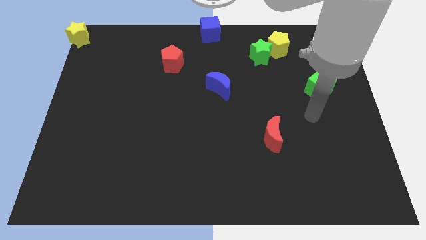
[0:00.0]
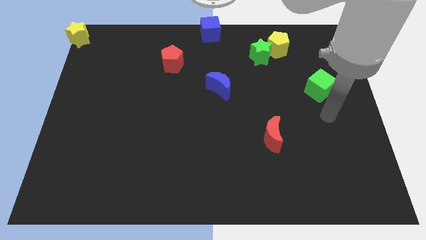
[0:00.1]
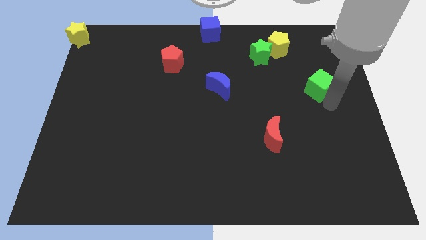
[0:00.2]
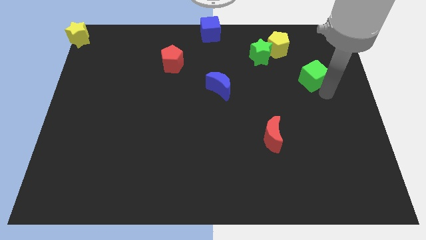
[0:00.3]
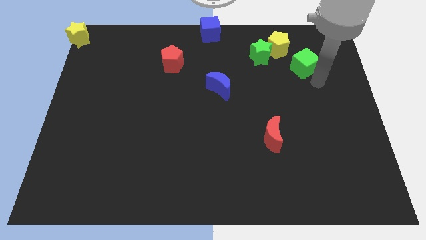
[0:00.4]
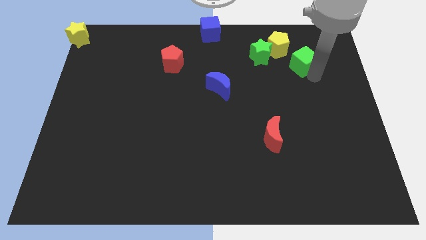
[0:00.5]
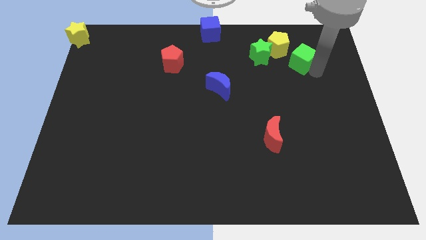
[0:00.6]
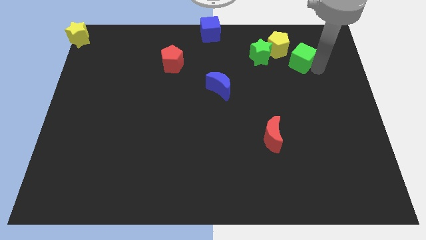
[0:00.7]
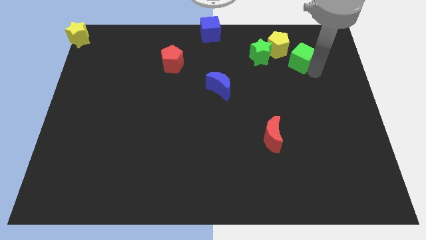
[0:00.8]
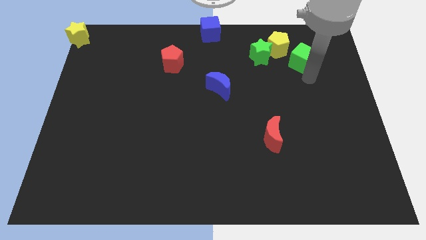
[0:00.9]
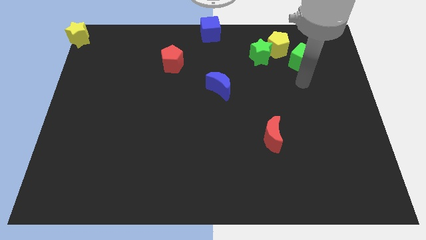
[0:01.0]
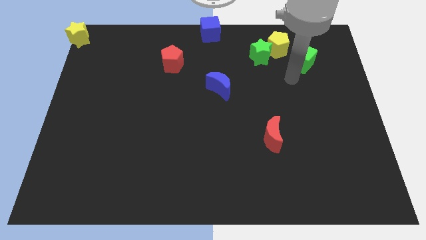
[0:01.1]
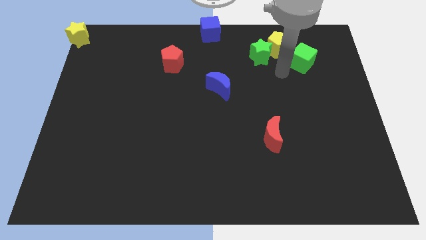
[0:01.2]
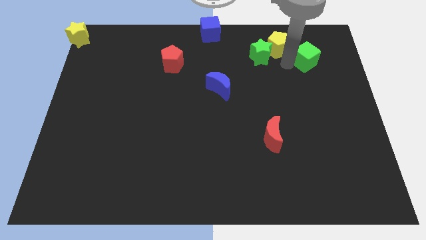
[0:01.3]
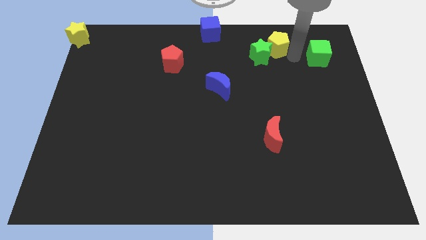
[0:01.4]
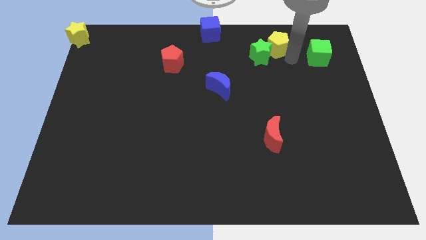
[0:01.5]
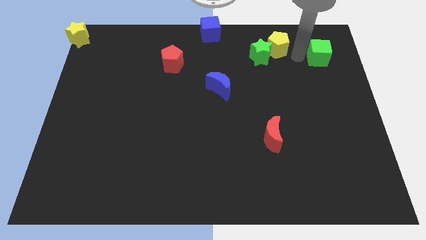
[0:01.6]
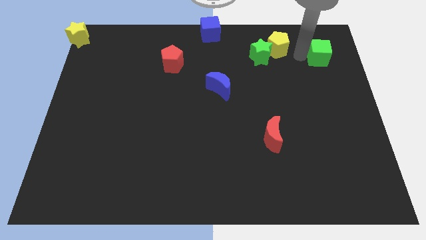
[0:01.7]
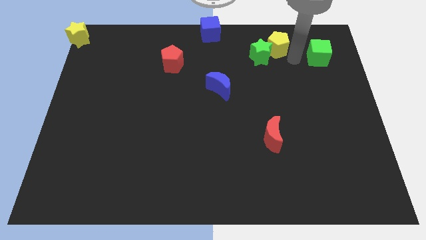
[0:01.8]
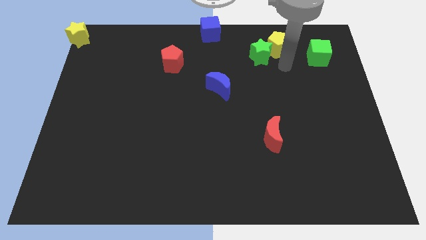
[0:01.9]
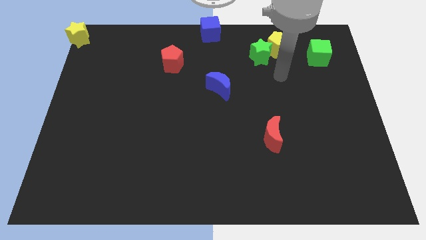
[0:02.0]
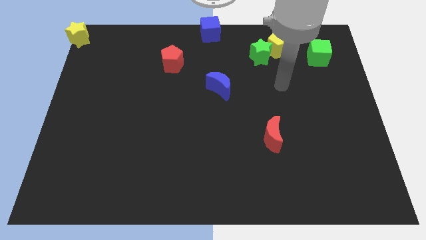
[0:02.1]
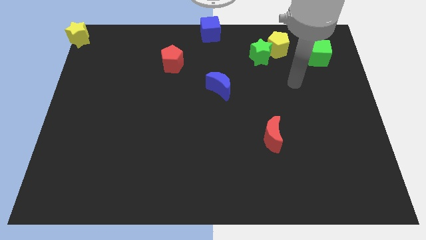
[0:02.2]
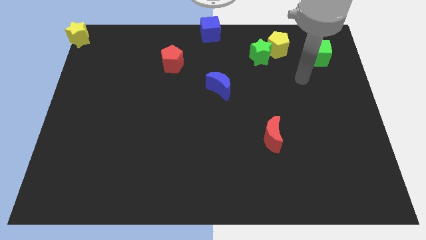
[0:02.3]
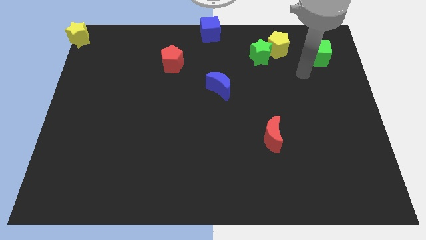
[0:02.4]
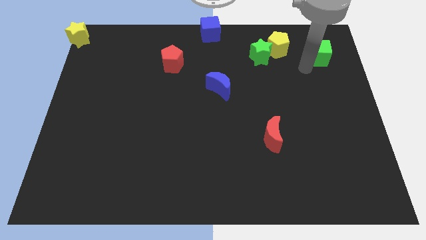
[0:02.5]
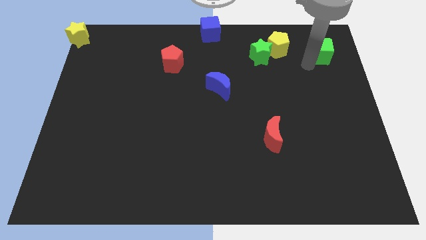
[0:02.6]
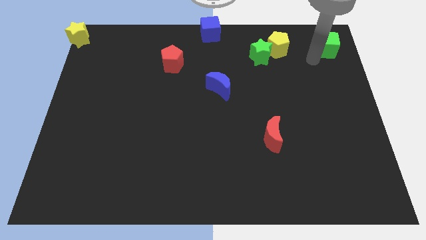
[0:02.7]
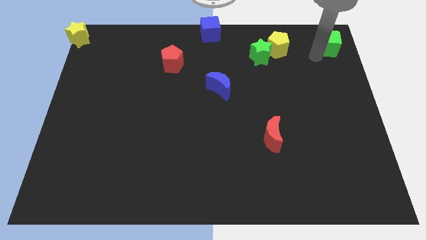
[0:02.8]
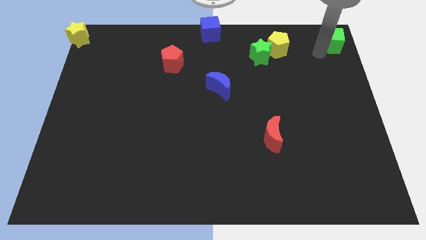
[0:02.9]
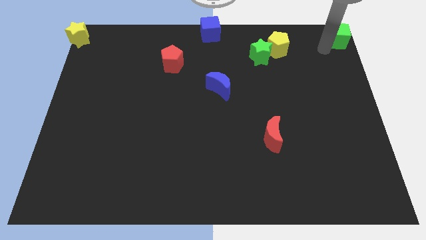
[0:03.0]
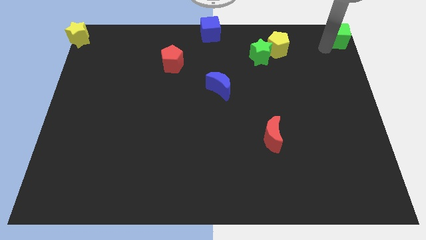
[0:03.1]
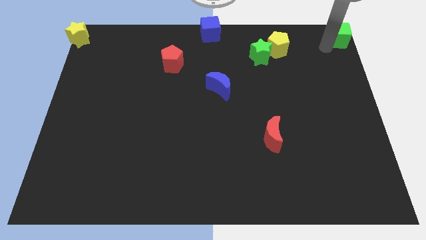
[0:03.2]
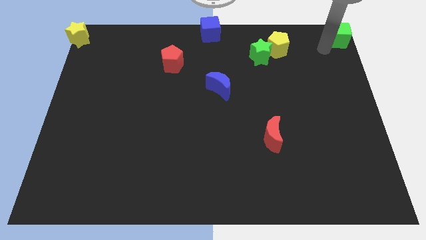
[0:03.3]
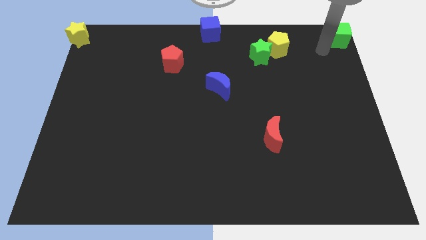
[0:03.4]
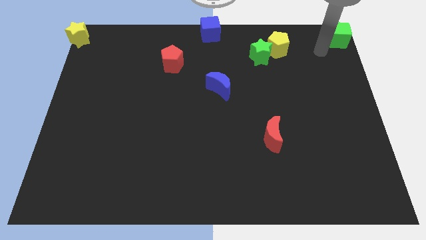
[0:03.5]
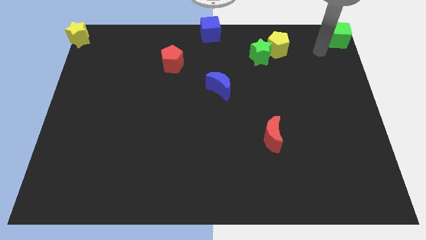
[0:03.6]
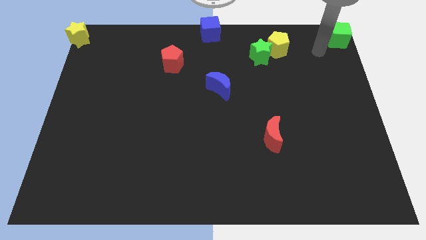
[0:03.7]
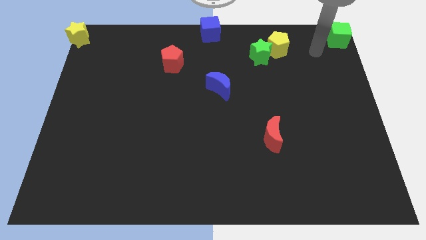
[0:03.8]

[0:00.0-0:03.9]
place the green cube to the top right corner side

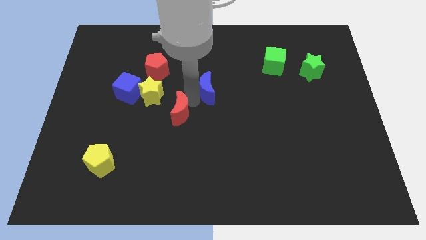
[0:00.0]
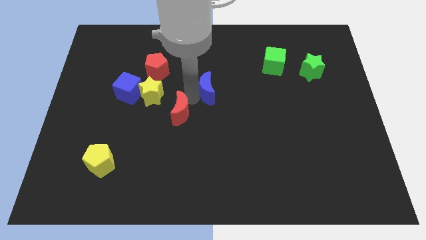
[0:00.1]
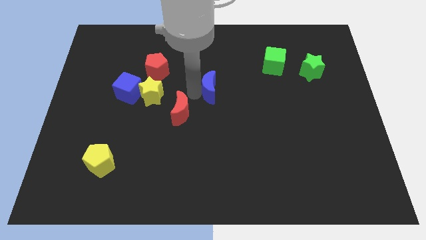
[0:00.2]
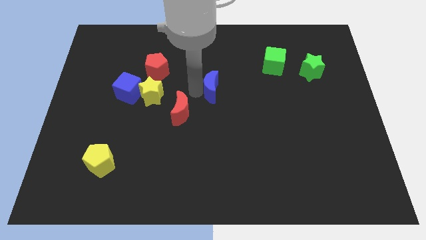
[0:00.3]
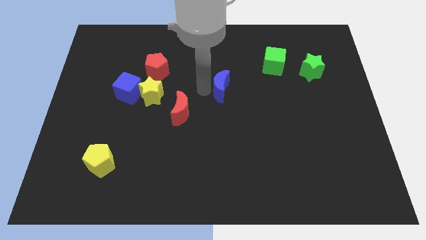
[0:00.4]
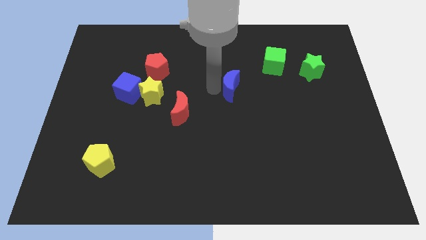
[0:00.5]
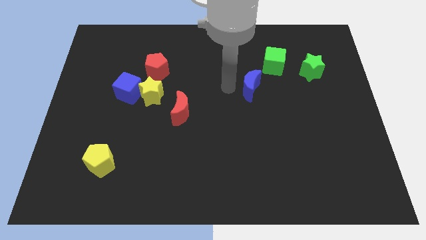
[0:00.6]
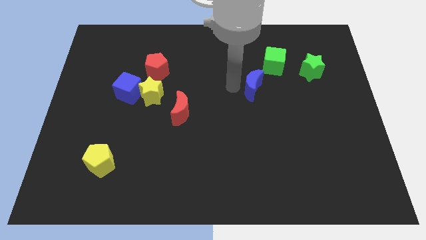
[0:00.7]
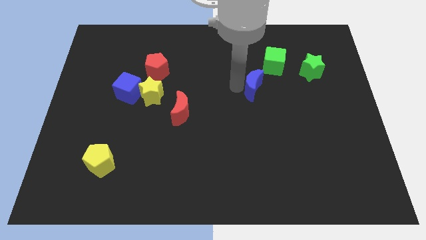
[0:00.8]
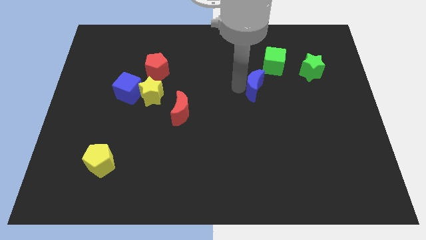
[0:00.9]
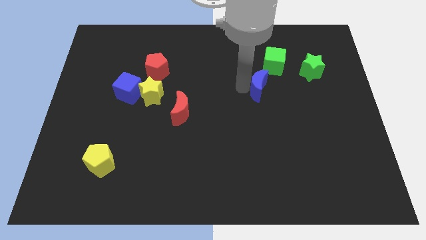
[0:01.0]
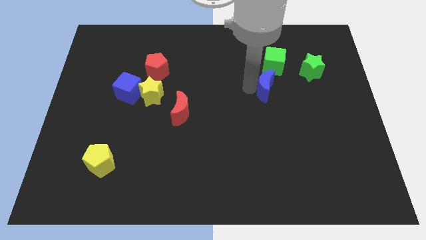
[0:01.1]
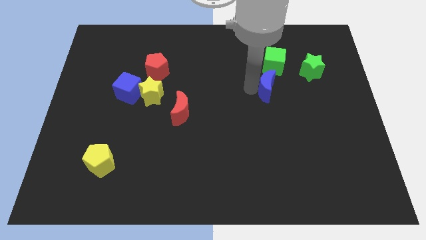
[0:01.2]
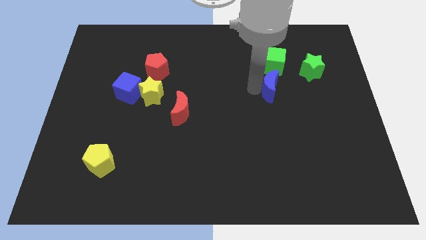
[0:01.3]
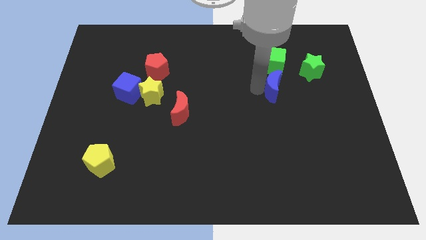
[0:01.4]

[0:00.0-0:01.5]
push the blue moon below the green cube

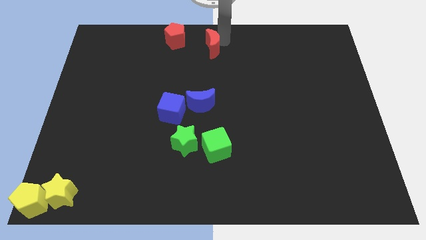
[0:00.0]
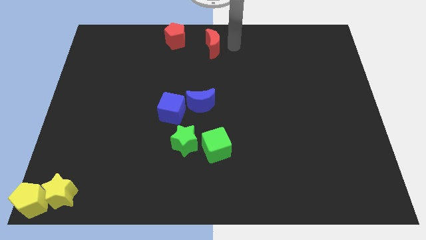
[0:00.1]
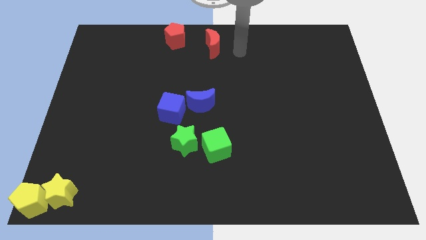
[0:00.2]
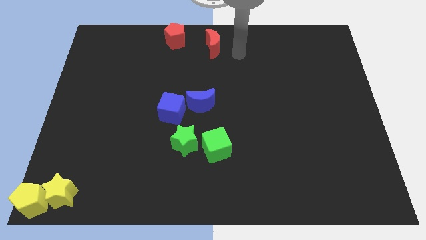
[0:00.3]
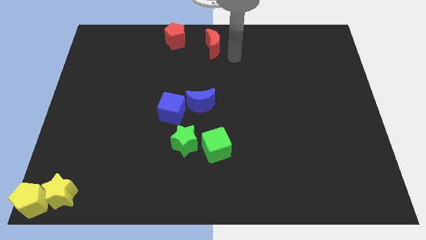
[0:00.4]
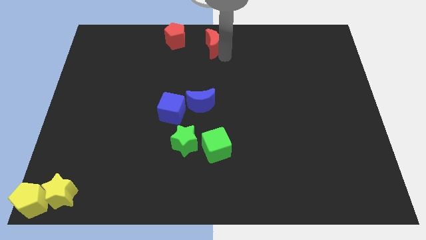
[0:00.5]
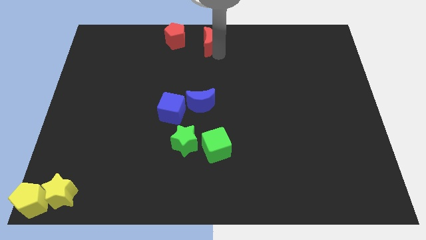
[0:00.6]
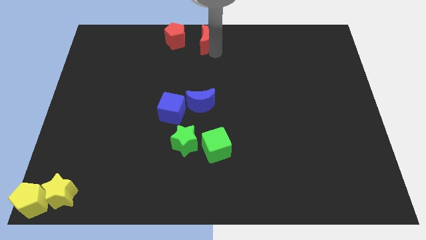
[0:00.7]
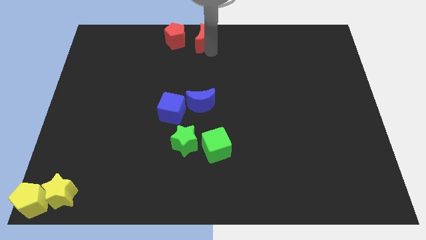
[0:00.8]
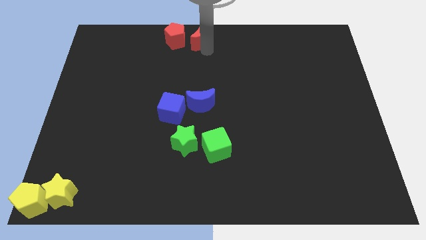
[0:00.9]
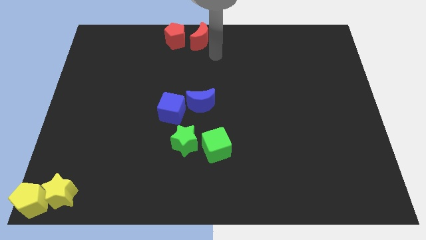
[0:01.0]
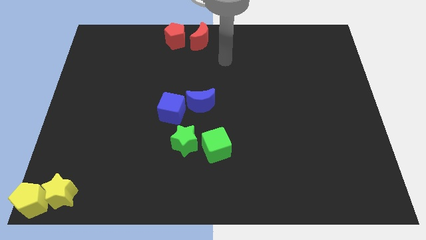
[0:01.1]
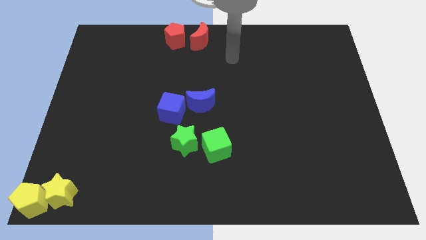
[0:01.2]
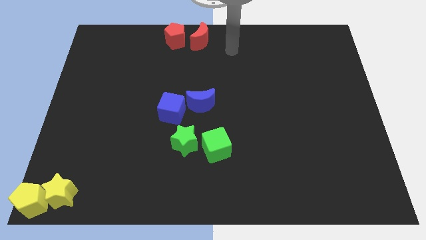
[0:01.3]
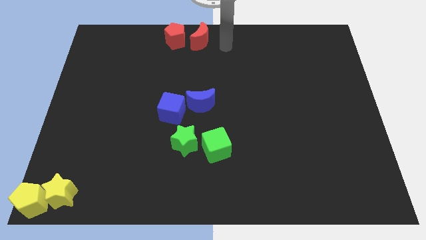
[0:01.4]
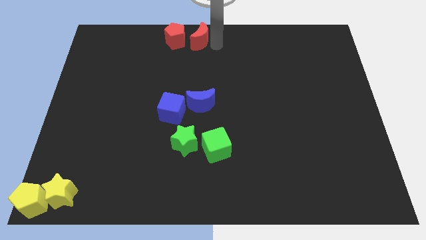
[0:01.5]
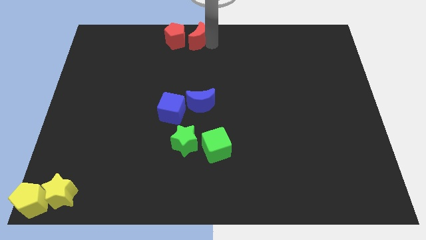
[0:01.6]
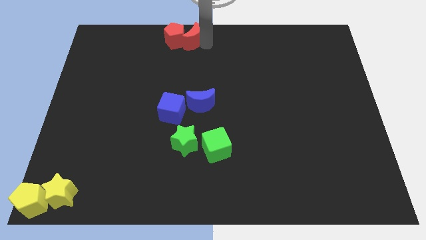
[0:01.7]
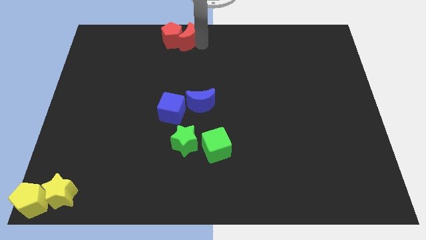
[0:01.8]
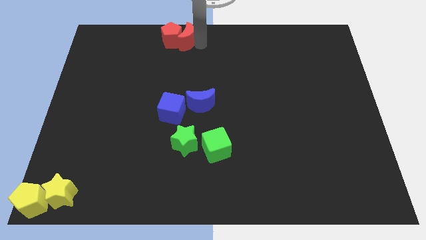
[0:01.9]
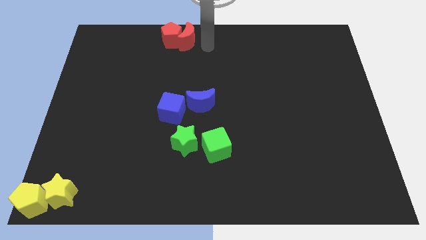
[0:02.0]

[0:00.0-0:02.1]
move the red crescent towards the right of the red pentagon

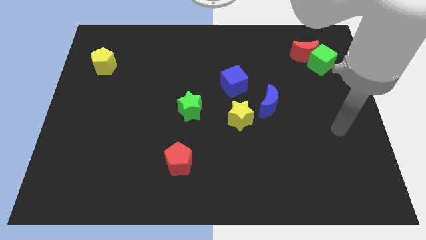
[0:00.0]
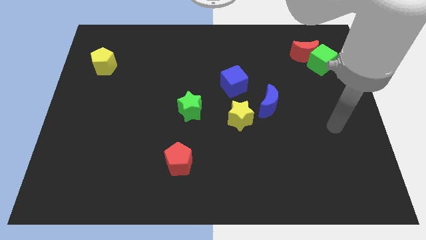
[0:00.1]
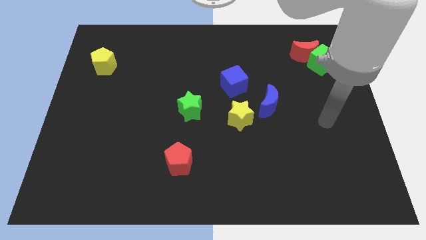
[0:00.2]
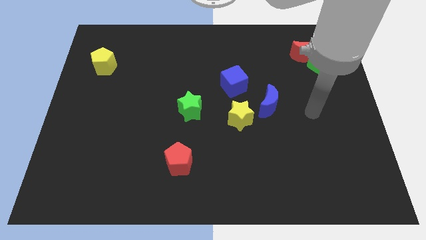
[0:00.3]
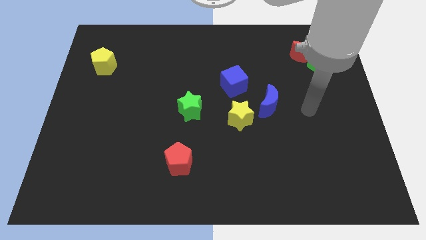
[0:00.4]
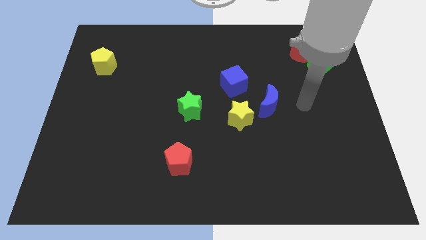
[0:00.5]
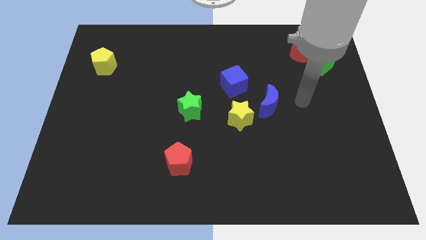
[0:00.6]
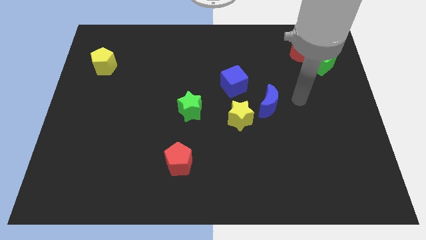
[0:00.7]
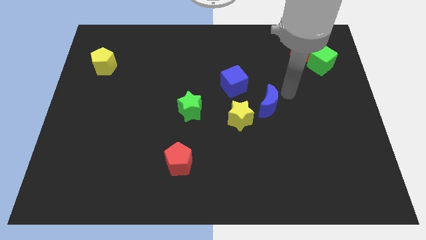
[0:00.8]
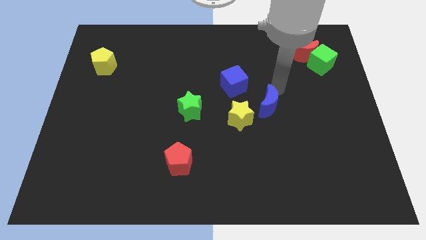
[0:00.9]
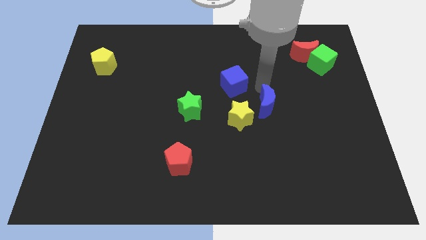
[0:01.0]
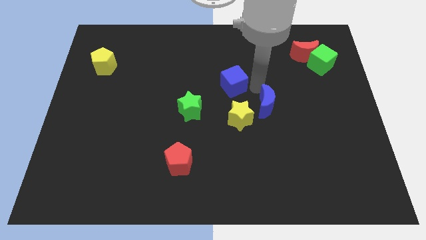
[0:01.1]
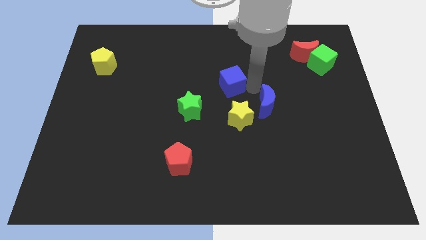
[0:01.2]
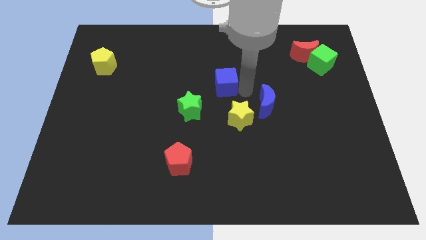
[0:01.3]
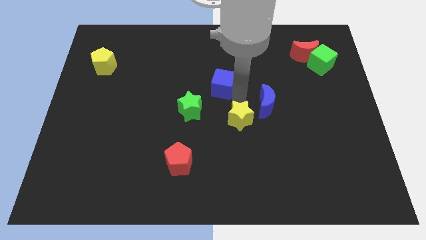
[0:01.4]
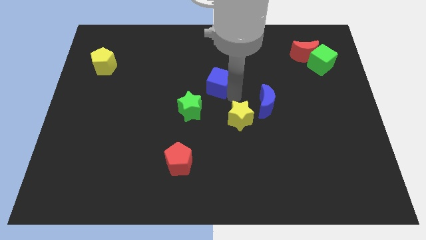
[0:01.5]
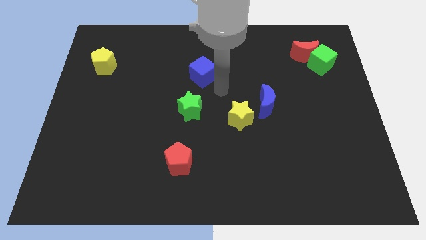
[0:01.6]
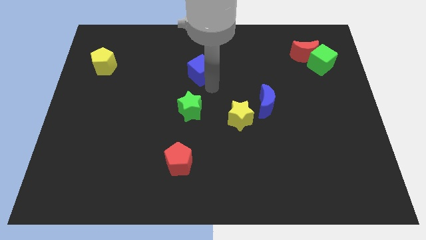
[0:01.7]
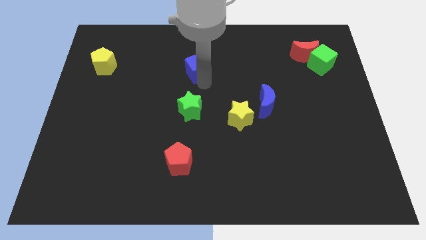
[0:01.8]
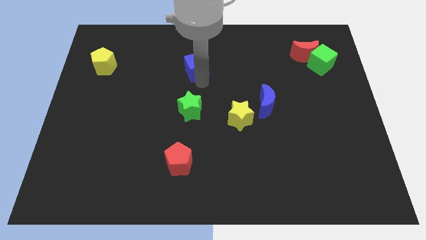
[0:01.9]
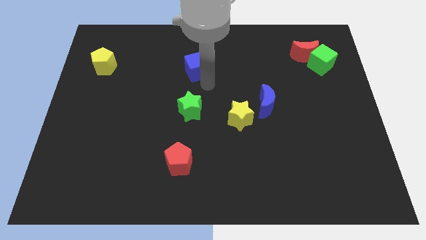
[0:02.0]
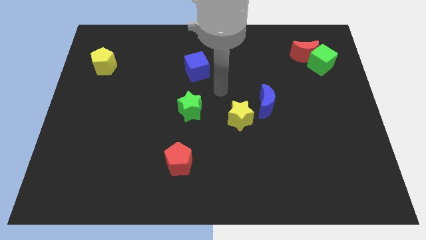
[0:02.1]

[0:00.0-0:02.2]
move the blue cube to the top of the green star
